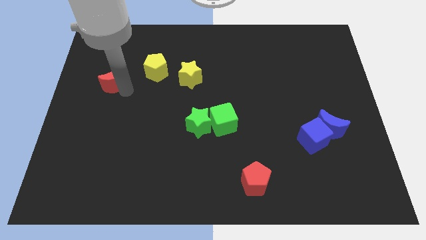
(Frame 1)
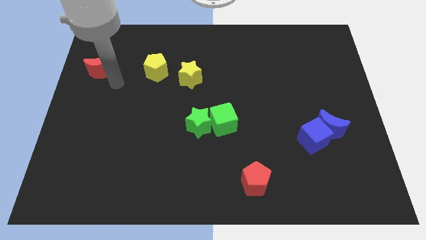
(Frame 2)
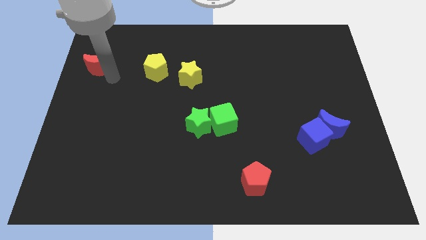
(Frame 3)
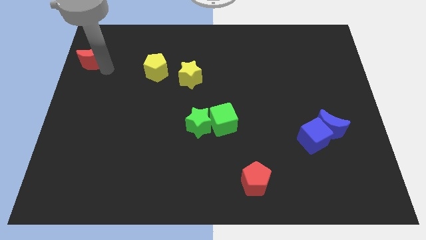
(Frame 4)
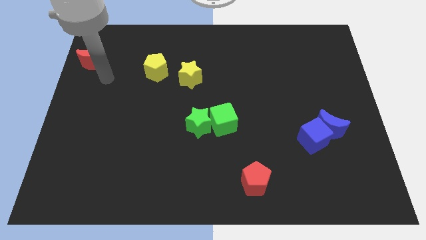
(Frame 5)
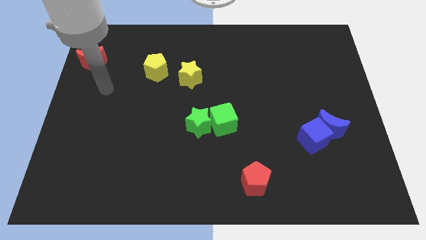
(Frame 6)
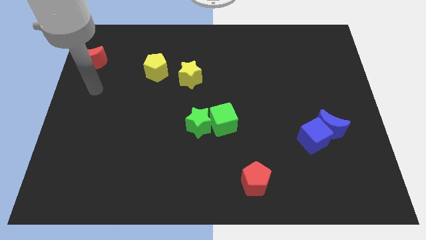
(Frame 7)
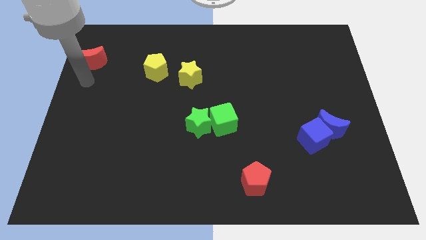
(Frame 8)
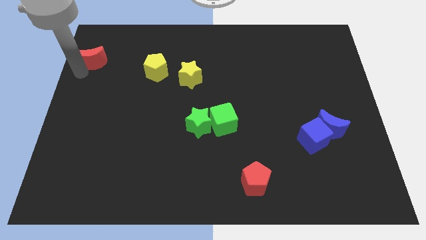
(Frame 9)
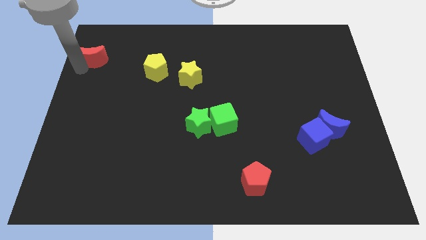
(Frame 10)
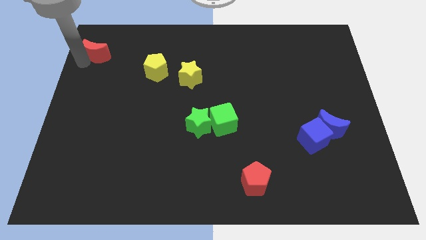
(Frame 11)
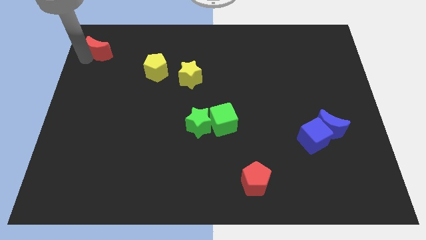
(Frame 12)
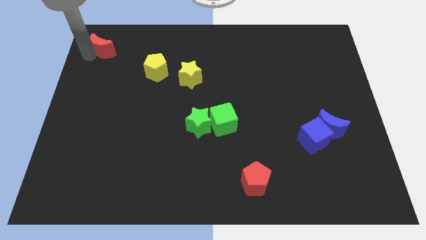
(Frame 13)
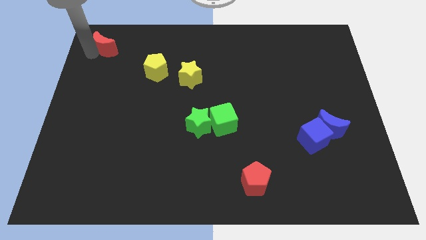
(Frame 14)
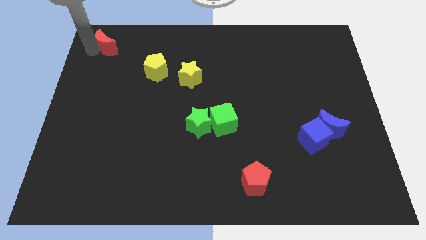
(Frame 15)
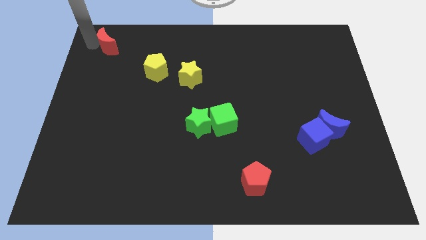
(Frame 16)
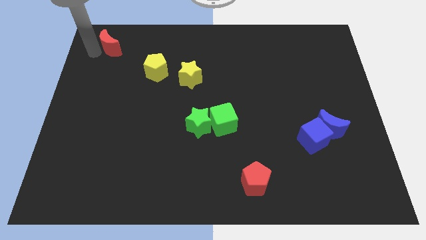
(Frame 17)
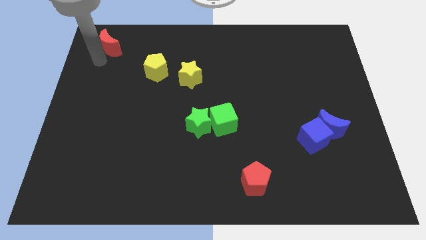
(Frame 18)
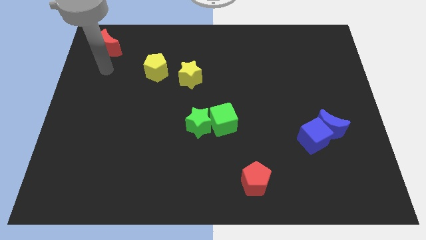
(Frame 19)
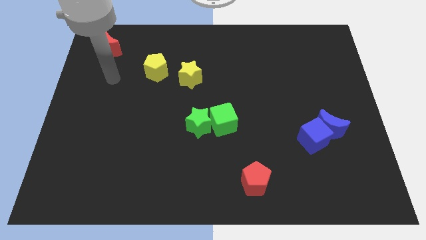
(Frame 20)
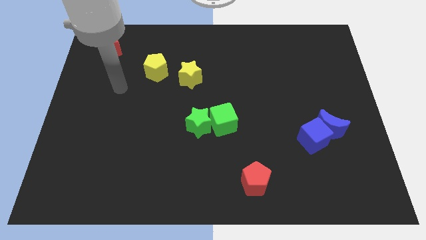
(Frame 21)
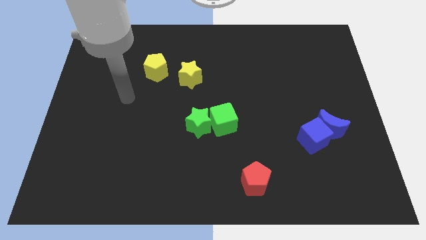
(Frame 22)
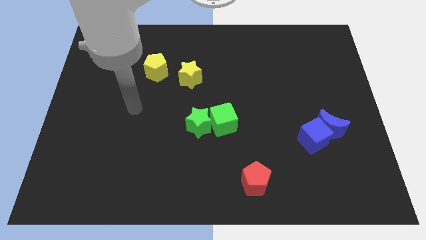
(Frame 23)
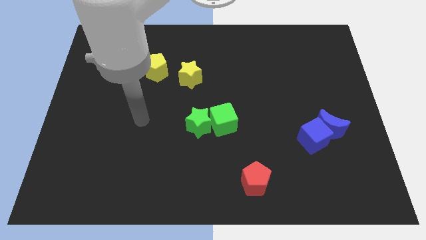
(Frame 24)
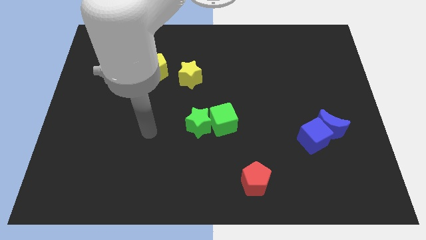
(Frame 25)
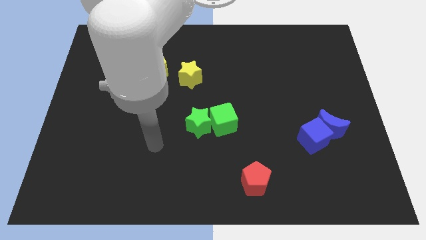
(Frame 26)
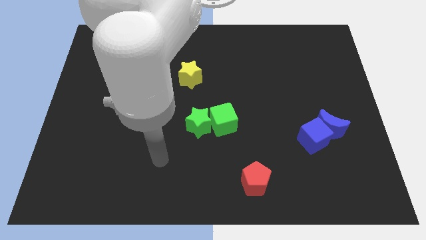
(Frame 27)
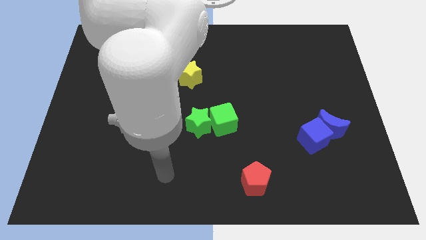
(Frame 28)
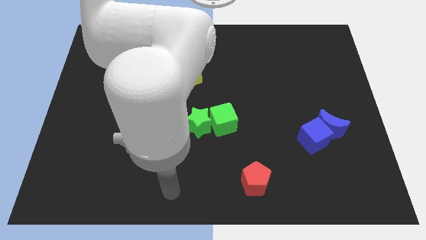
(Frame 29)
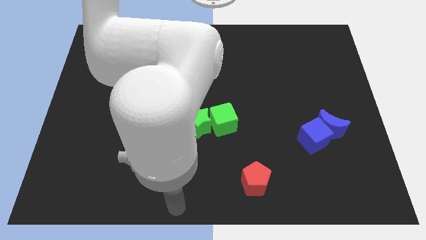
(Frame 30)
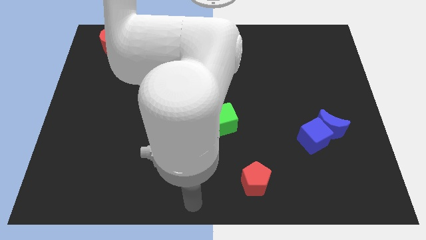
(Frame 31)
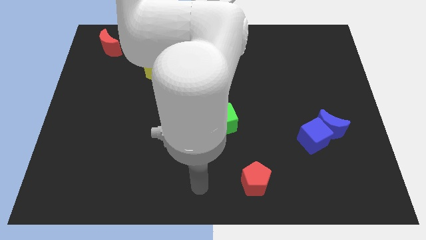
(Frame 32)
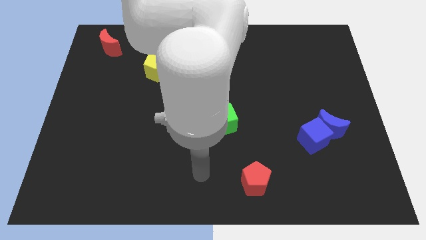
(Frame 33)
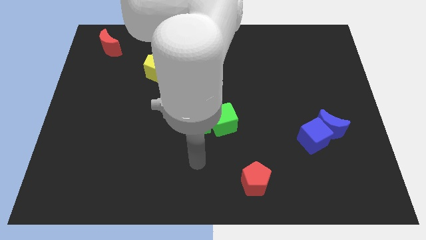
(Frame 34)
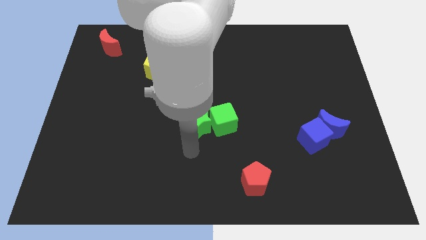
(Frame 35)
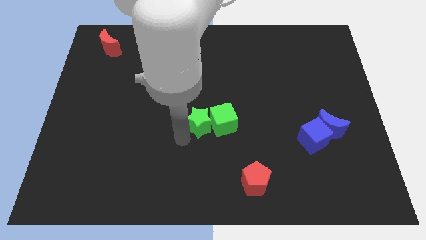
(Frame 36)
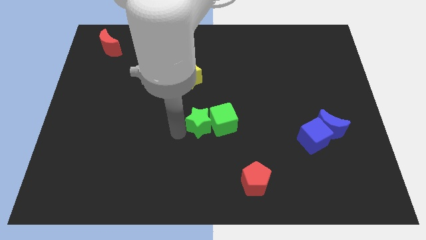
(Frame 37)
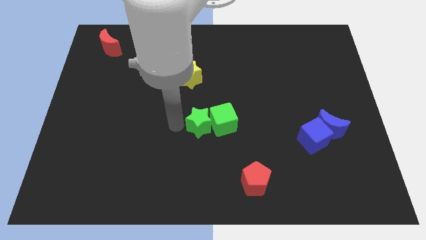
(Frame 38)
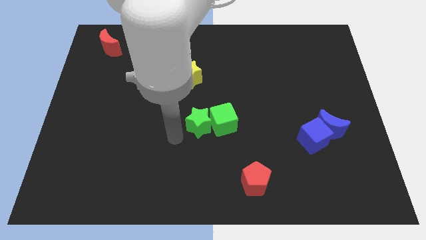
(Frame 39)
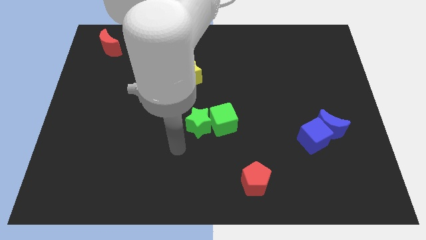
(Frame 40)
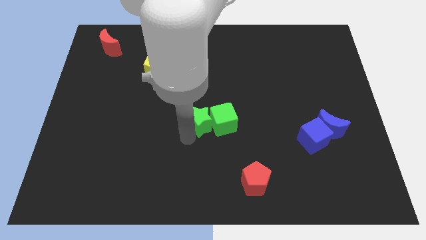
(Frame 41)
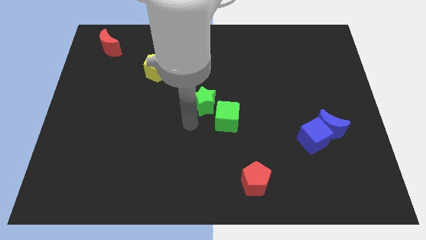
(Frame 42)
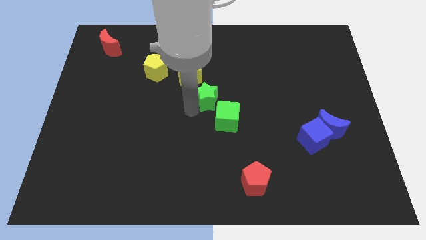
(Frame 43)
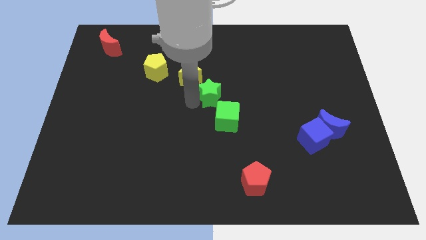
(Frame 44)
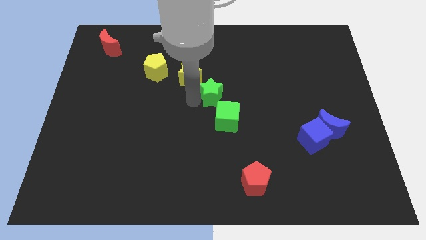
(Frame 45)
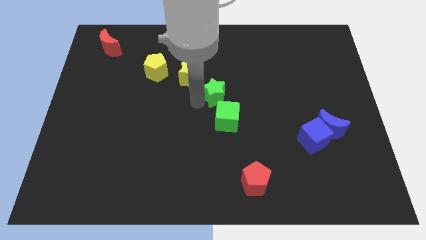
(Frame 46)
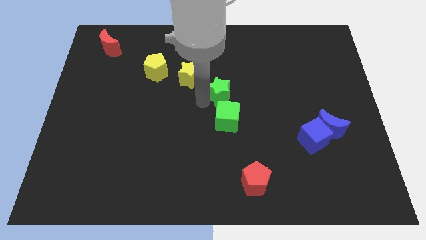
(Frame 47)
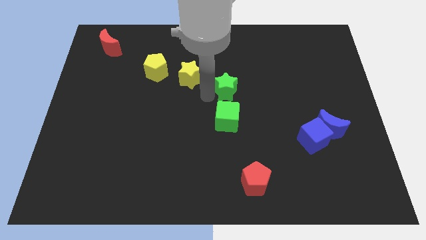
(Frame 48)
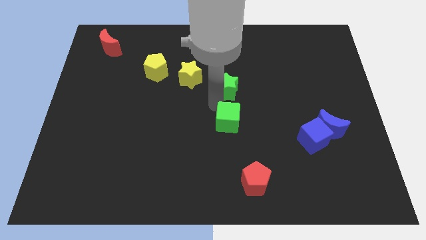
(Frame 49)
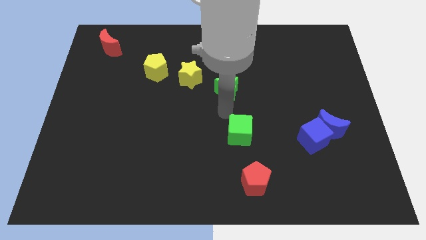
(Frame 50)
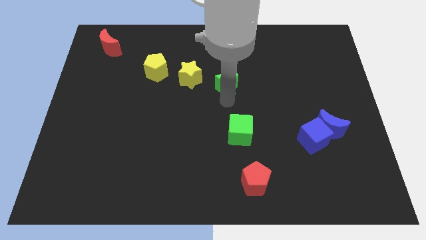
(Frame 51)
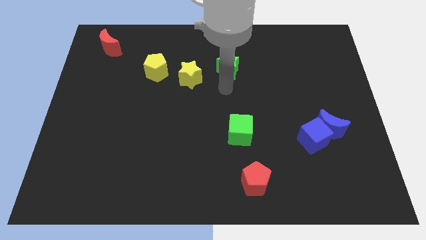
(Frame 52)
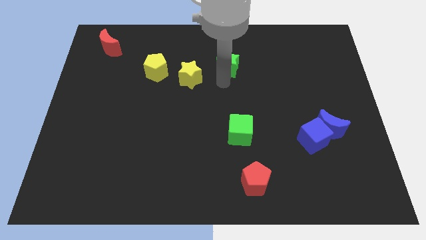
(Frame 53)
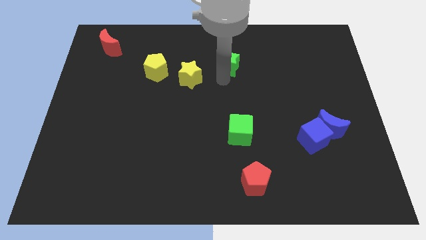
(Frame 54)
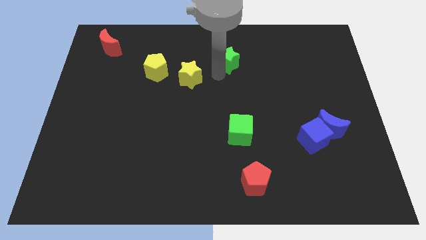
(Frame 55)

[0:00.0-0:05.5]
push the green star towards top of the board

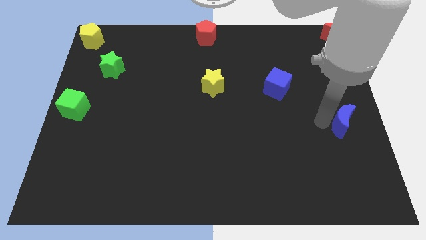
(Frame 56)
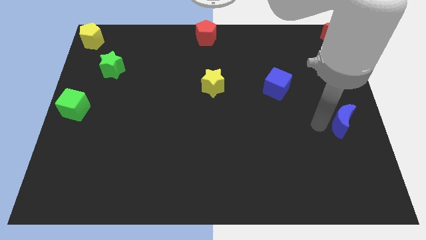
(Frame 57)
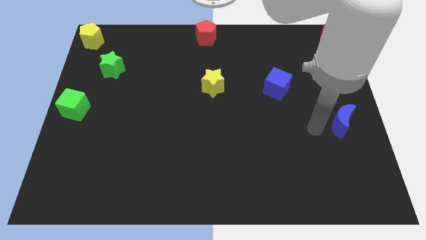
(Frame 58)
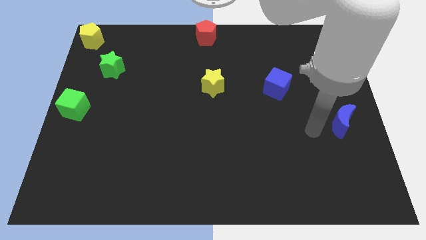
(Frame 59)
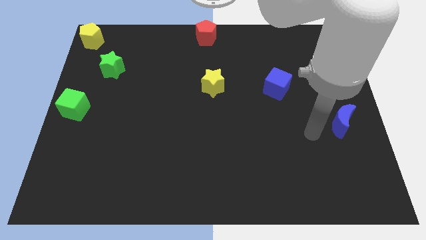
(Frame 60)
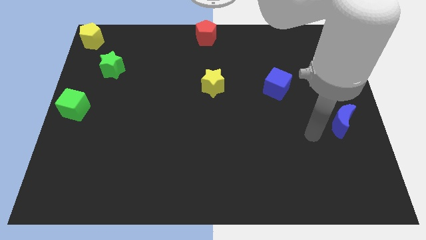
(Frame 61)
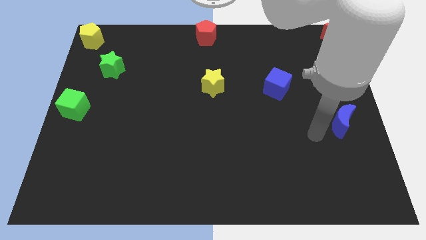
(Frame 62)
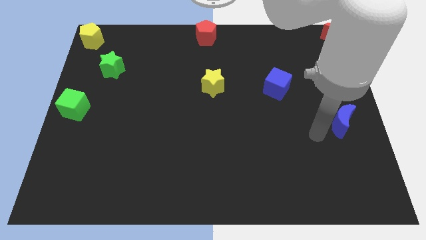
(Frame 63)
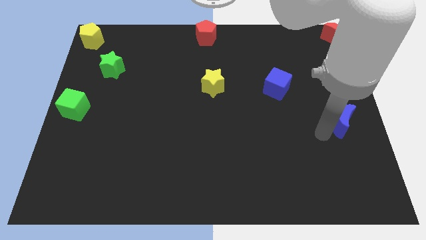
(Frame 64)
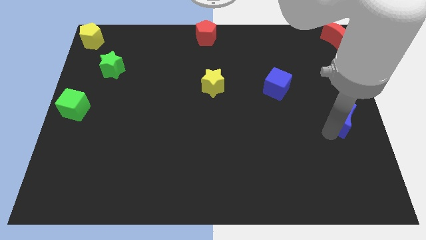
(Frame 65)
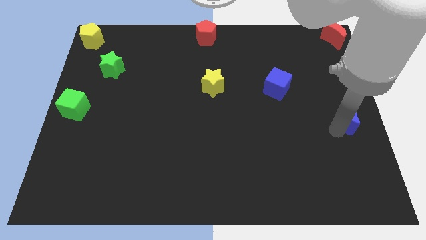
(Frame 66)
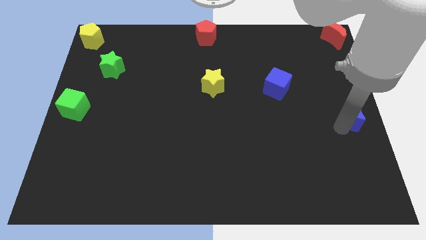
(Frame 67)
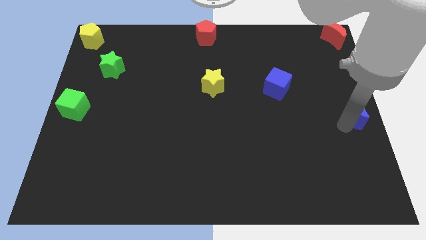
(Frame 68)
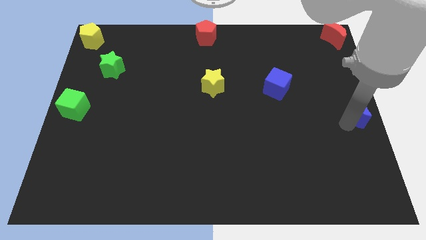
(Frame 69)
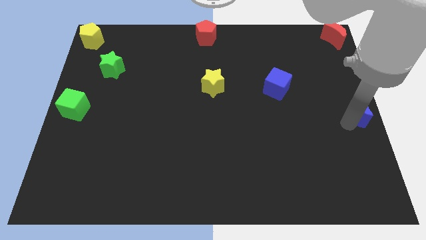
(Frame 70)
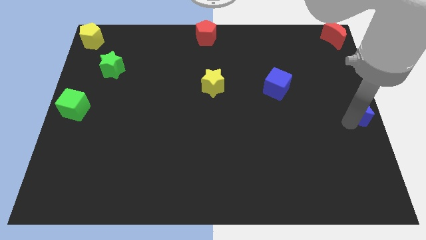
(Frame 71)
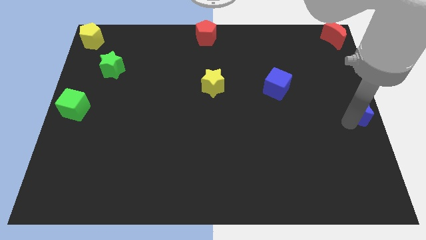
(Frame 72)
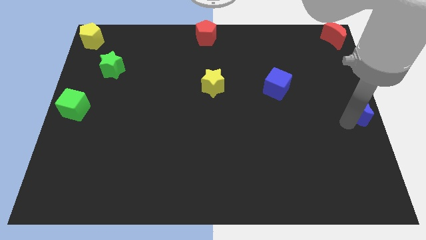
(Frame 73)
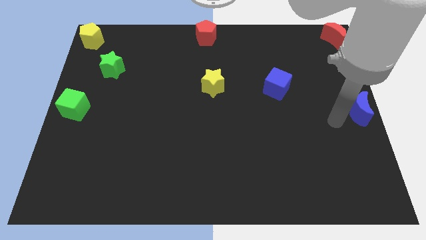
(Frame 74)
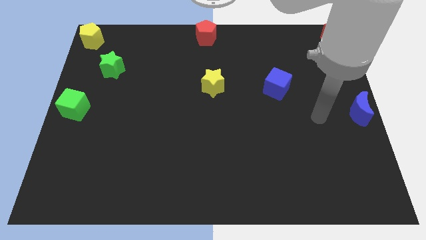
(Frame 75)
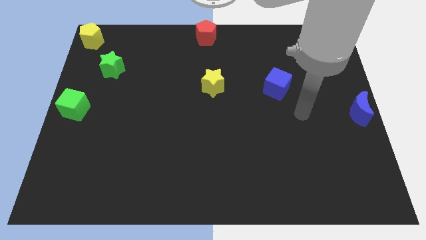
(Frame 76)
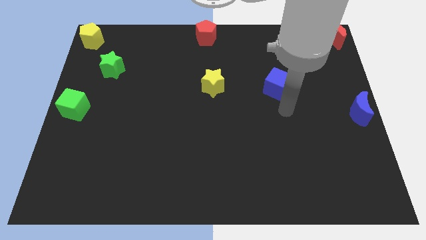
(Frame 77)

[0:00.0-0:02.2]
move the blue crescent to the right center of the board

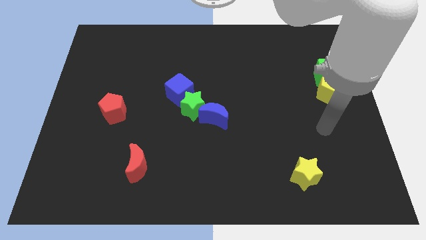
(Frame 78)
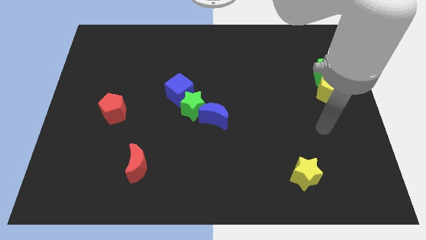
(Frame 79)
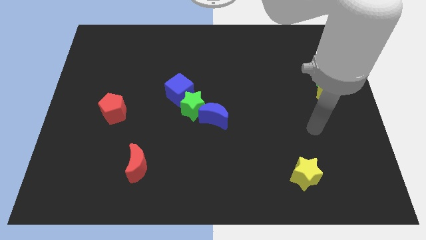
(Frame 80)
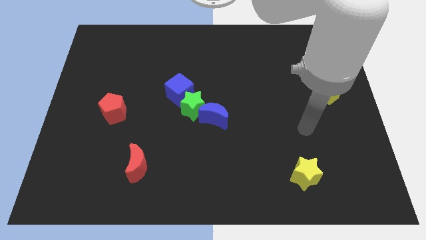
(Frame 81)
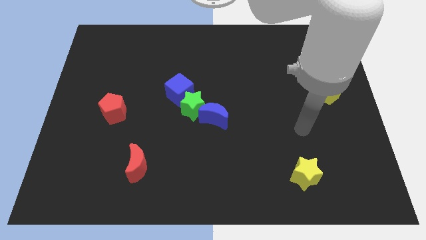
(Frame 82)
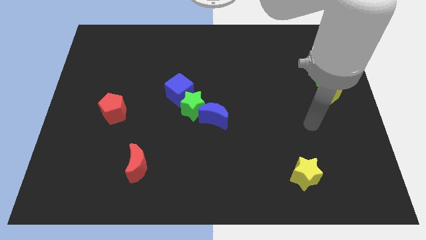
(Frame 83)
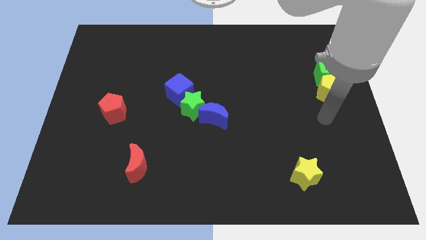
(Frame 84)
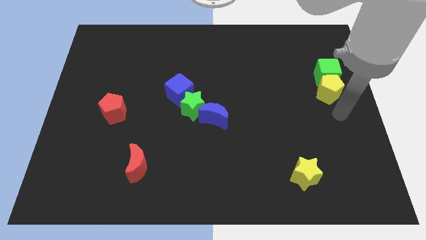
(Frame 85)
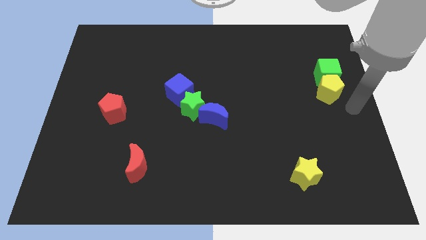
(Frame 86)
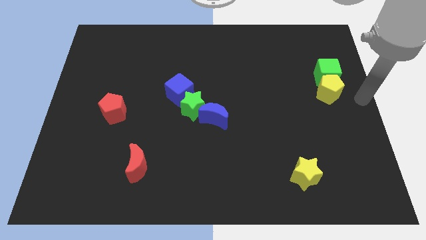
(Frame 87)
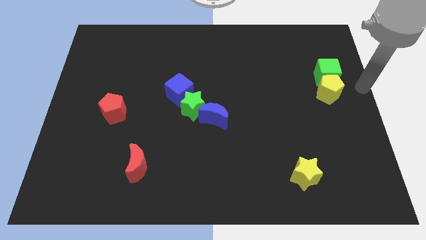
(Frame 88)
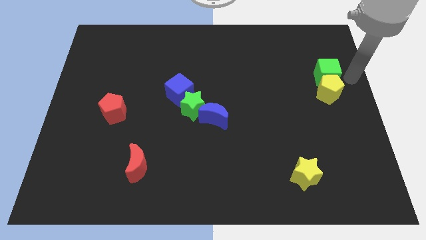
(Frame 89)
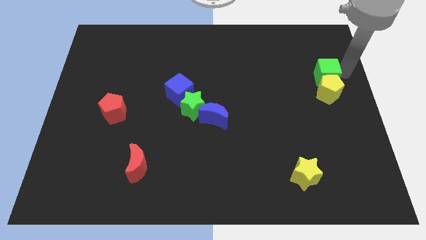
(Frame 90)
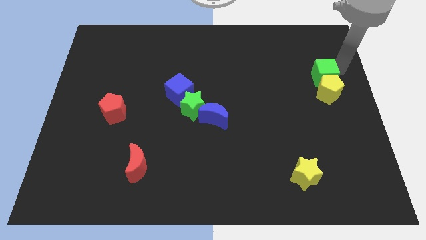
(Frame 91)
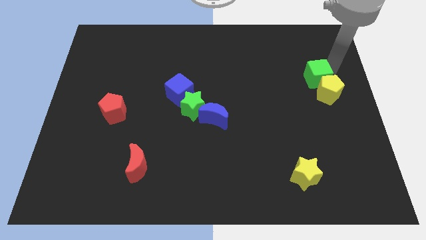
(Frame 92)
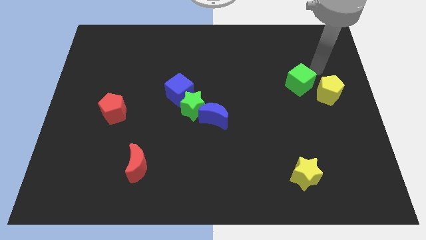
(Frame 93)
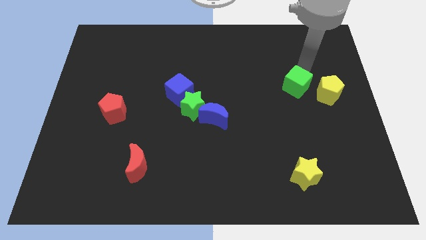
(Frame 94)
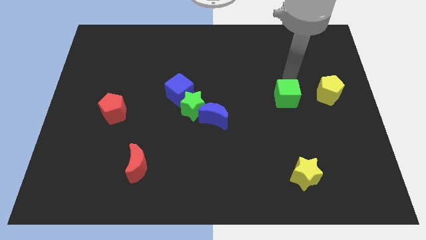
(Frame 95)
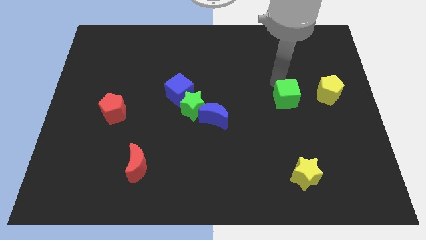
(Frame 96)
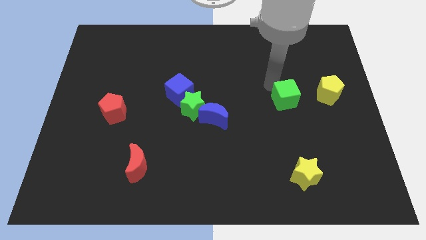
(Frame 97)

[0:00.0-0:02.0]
separate green cube and the yellow pentagon
